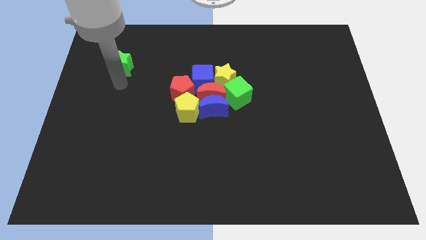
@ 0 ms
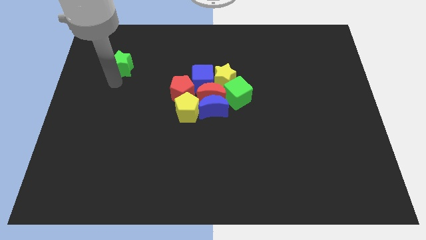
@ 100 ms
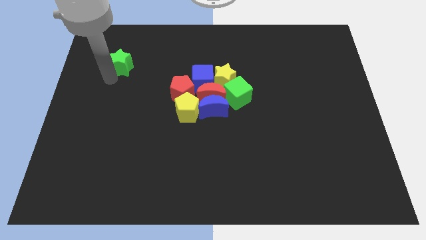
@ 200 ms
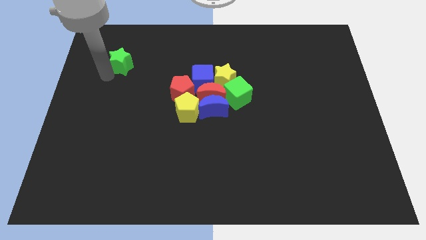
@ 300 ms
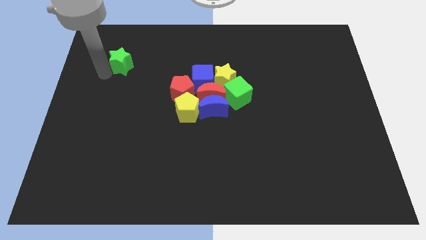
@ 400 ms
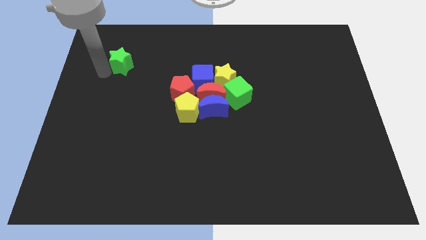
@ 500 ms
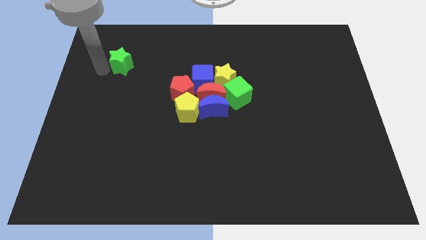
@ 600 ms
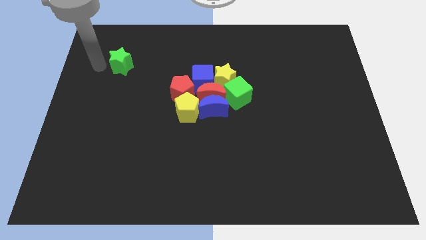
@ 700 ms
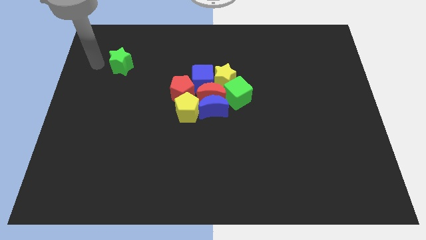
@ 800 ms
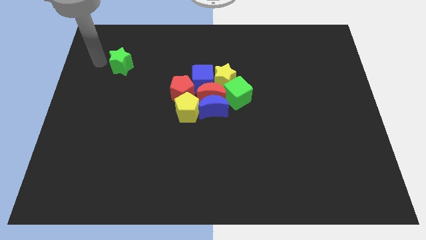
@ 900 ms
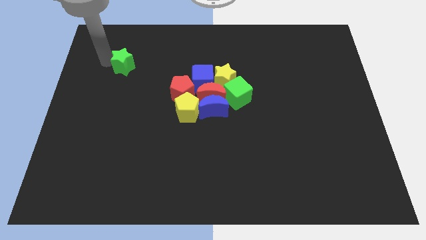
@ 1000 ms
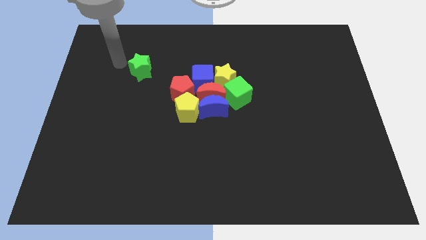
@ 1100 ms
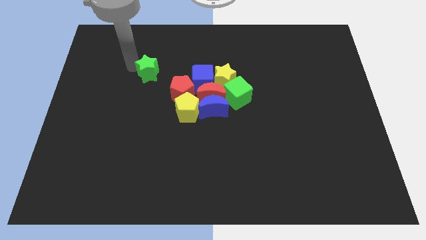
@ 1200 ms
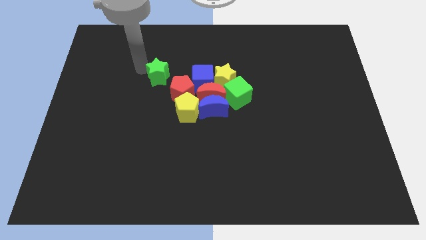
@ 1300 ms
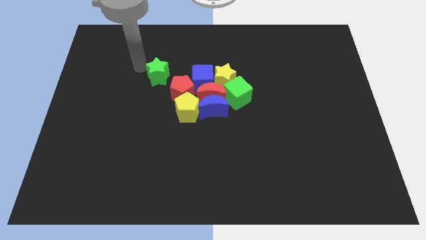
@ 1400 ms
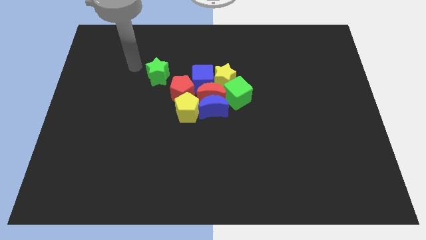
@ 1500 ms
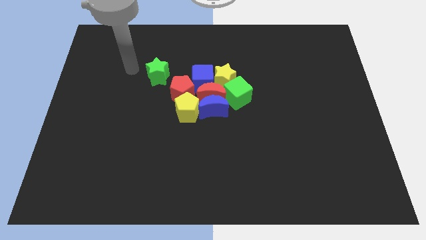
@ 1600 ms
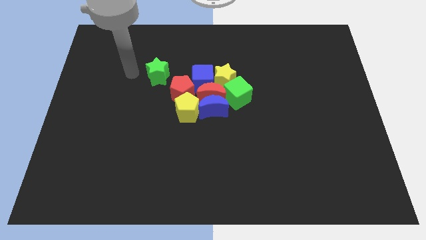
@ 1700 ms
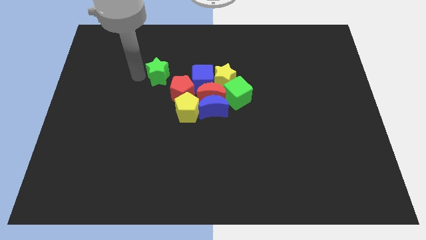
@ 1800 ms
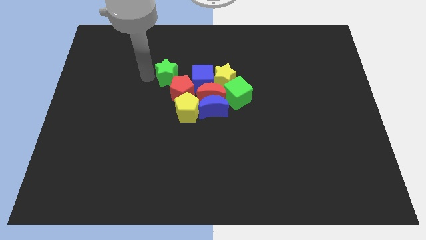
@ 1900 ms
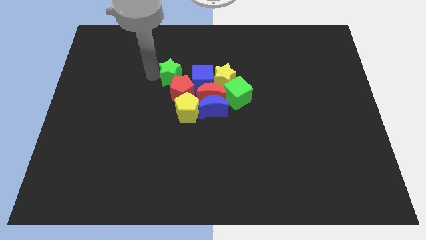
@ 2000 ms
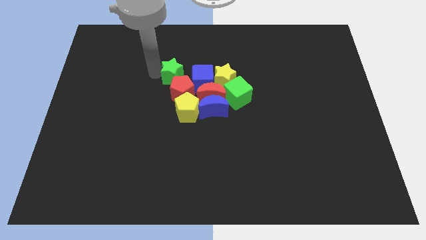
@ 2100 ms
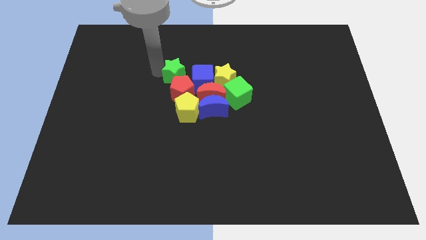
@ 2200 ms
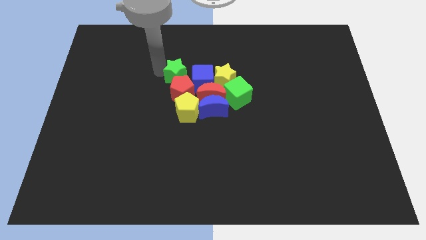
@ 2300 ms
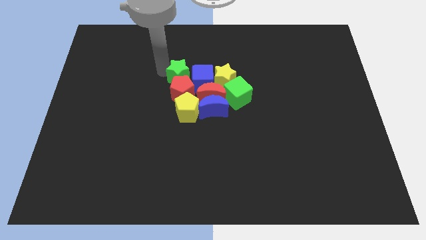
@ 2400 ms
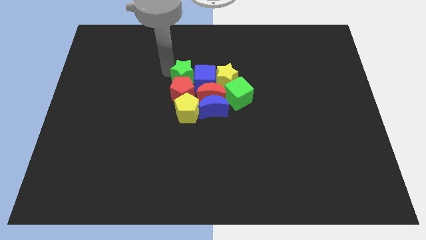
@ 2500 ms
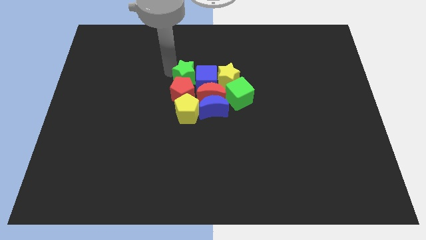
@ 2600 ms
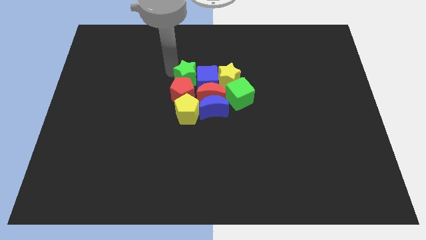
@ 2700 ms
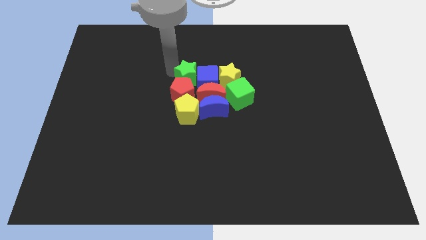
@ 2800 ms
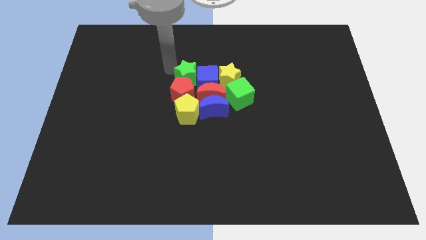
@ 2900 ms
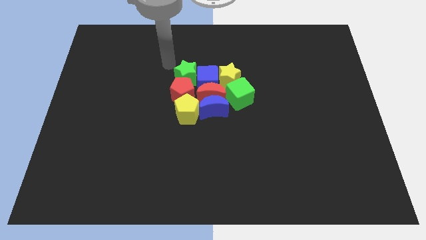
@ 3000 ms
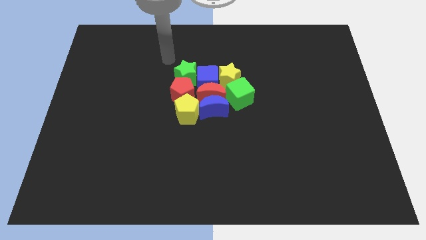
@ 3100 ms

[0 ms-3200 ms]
move green star into the group of objects

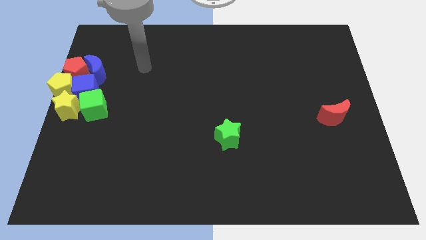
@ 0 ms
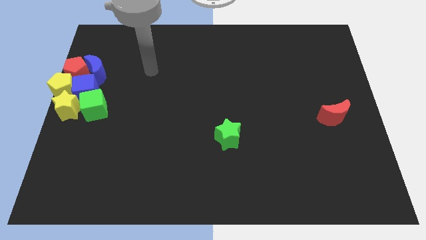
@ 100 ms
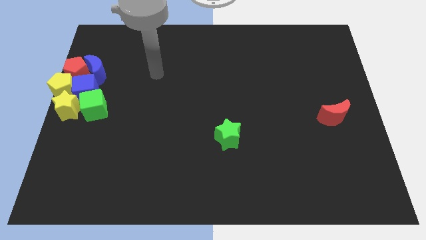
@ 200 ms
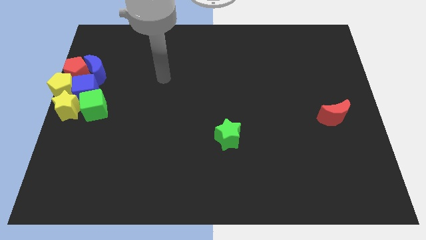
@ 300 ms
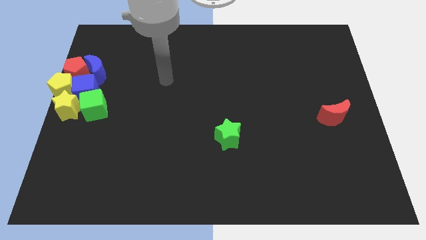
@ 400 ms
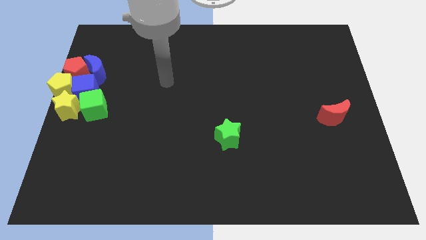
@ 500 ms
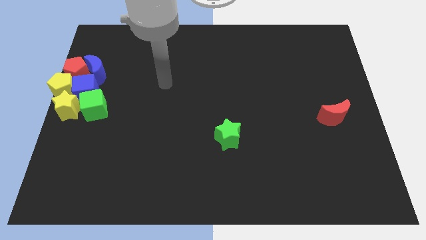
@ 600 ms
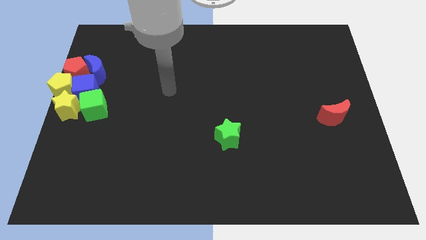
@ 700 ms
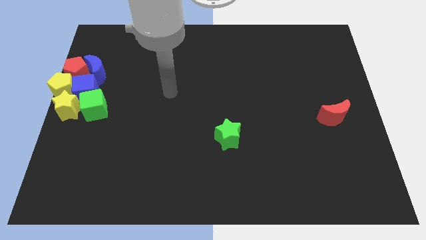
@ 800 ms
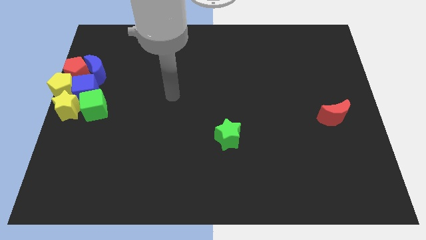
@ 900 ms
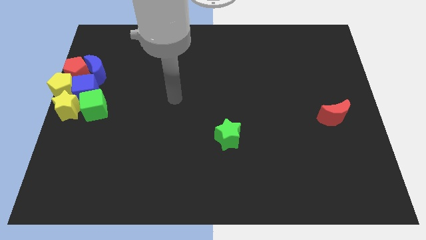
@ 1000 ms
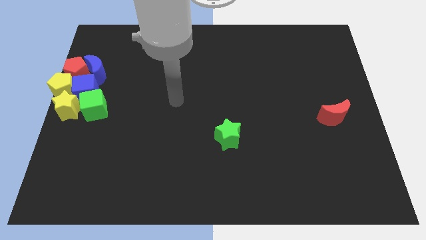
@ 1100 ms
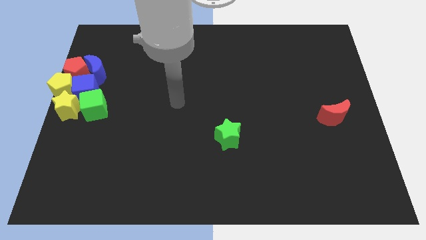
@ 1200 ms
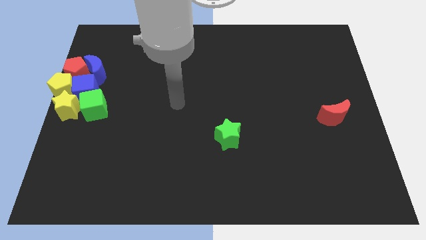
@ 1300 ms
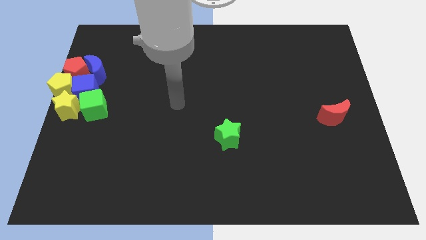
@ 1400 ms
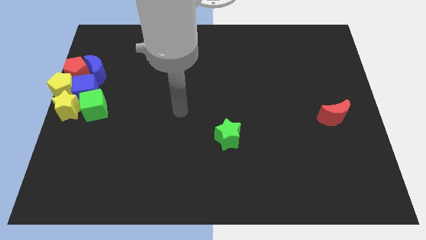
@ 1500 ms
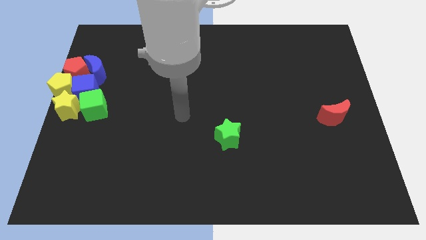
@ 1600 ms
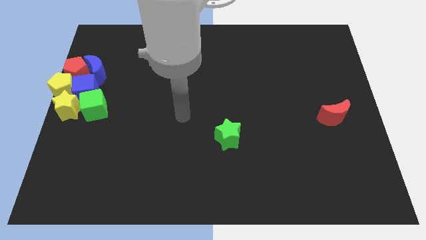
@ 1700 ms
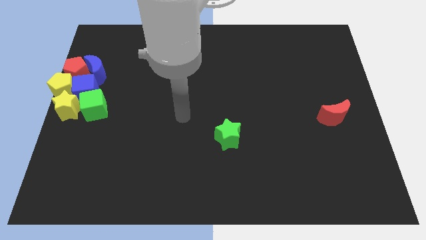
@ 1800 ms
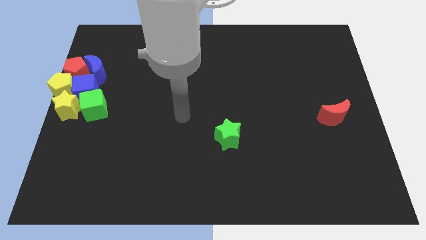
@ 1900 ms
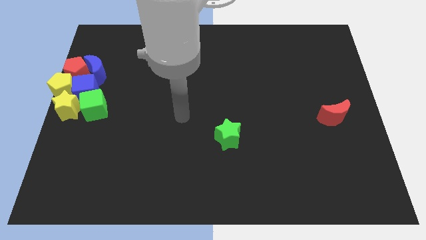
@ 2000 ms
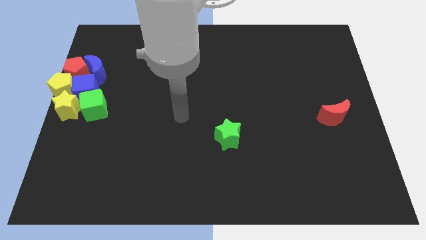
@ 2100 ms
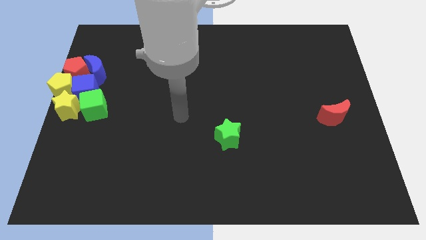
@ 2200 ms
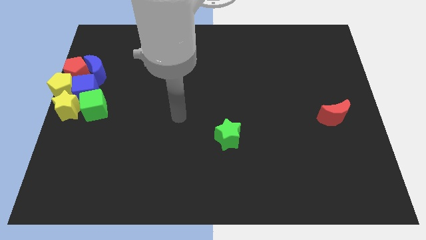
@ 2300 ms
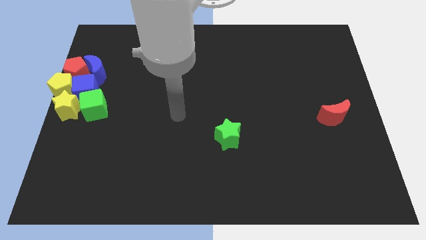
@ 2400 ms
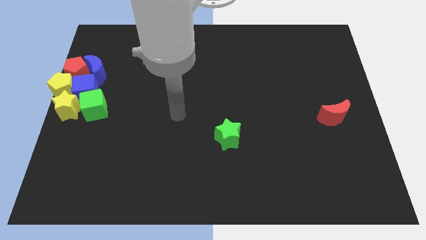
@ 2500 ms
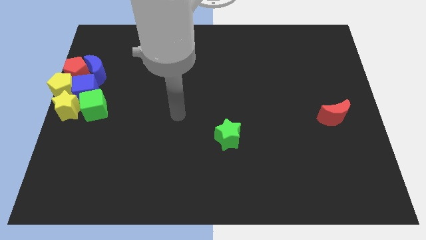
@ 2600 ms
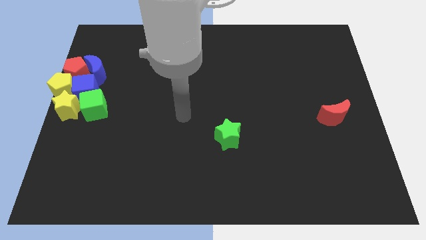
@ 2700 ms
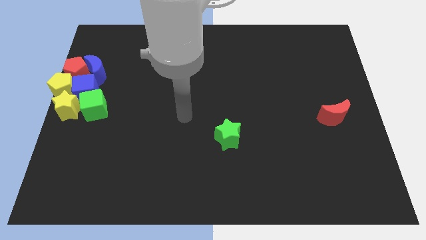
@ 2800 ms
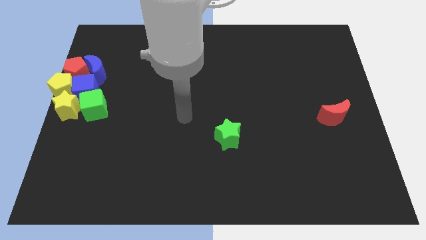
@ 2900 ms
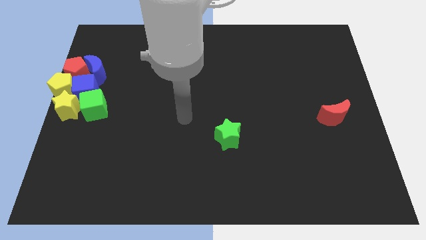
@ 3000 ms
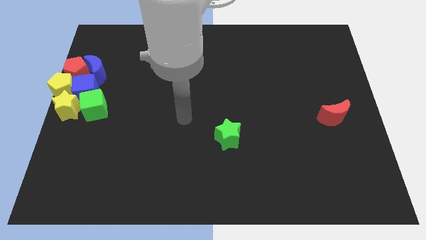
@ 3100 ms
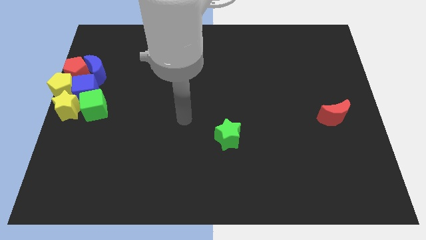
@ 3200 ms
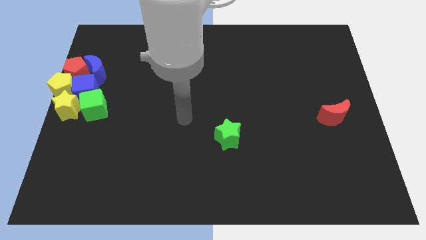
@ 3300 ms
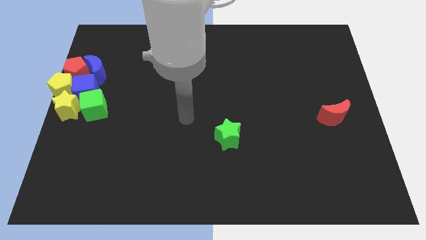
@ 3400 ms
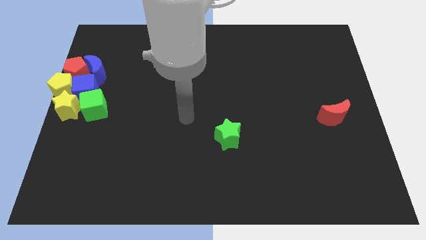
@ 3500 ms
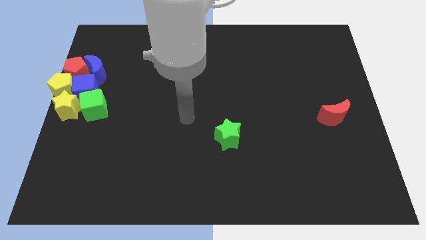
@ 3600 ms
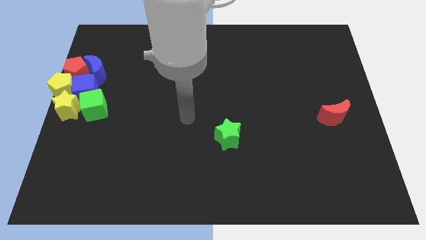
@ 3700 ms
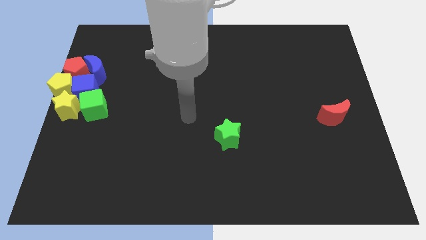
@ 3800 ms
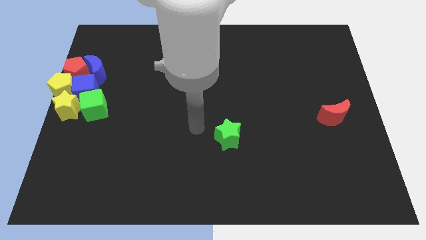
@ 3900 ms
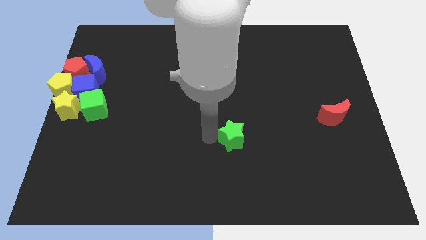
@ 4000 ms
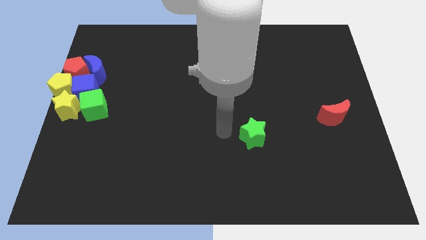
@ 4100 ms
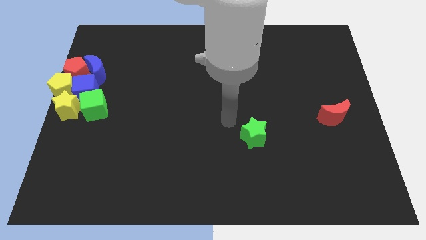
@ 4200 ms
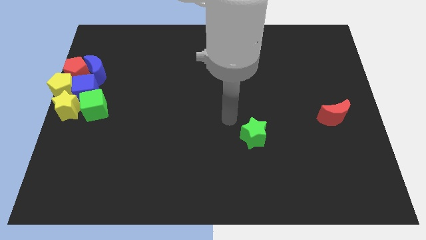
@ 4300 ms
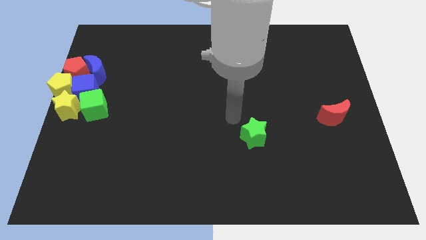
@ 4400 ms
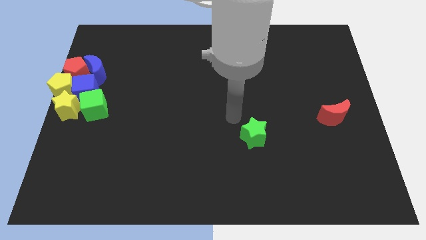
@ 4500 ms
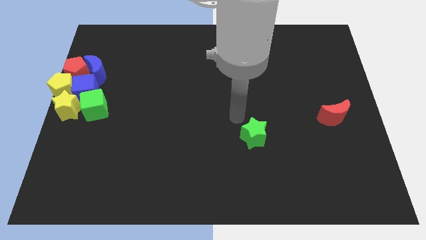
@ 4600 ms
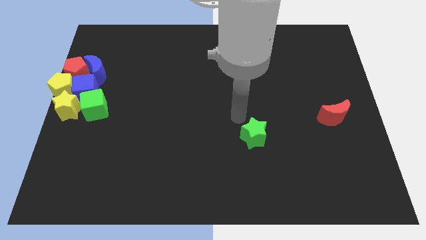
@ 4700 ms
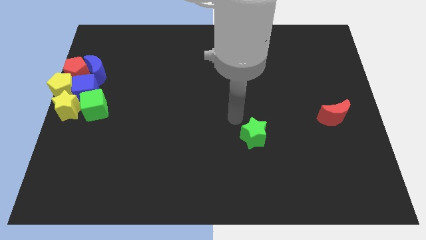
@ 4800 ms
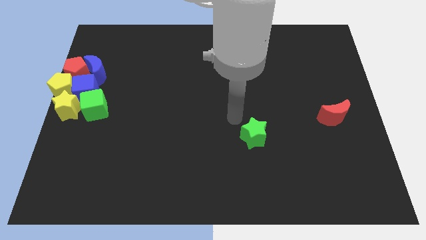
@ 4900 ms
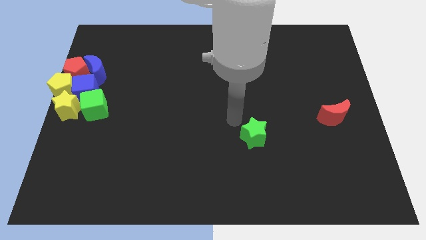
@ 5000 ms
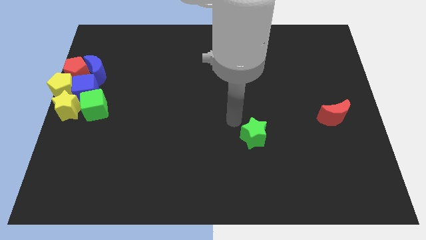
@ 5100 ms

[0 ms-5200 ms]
push the green star slightly to the right

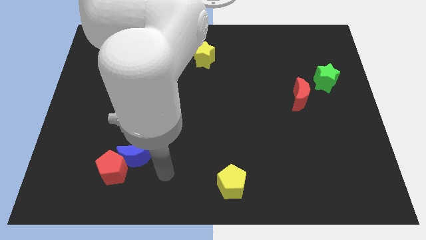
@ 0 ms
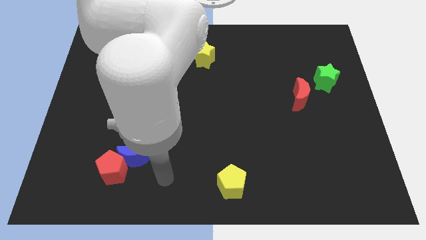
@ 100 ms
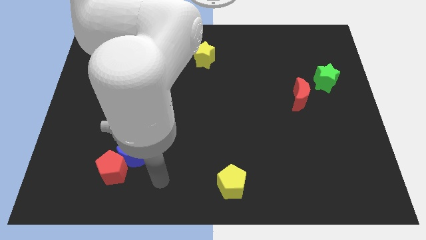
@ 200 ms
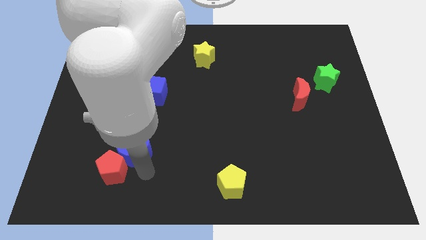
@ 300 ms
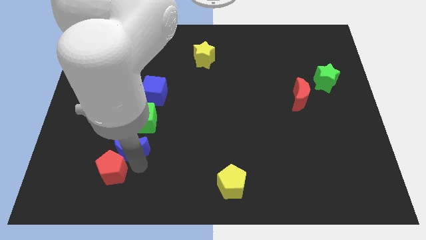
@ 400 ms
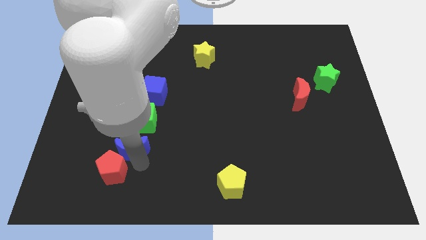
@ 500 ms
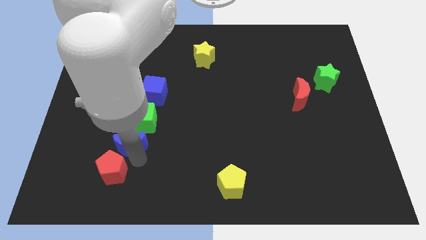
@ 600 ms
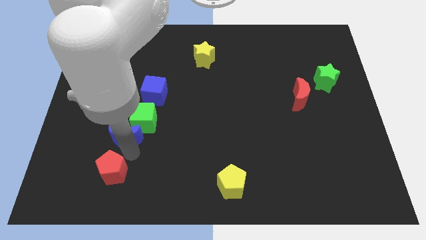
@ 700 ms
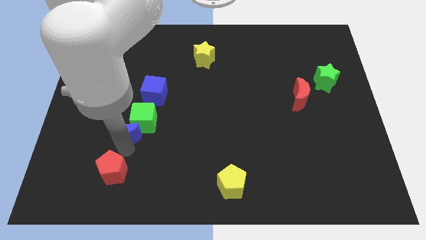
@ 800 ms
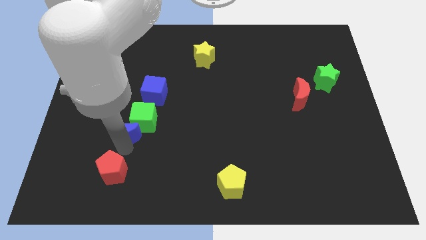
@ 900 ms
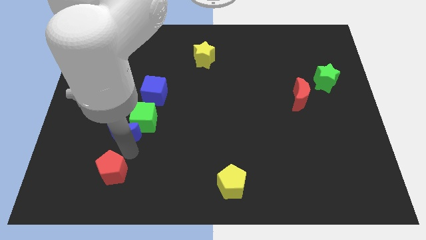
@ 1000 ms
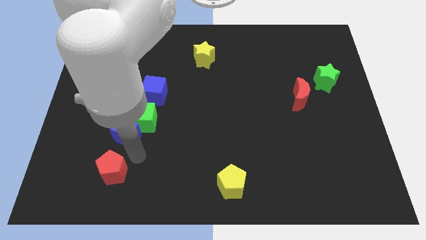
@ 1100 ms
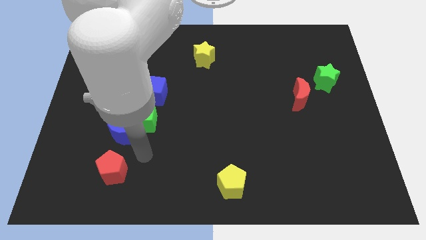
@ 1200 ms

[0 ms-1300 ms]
push the blue moon into the green cube
